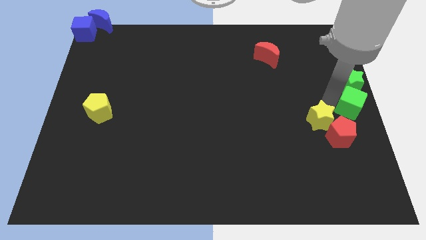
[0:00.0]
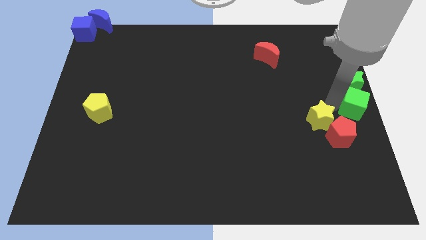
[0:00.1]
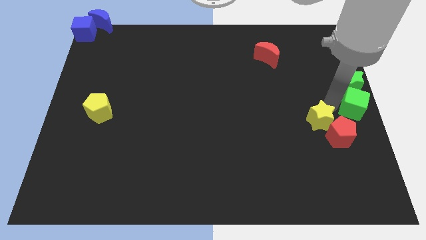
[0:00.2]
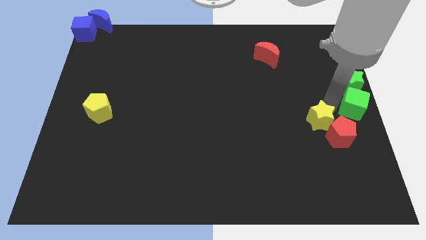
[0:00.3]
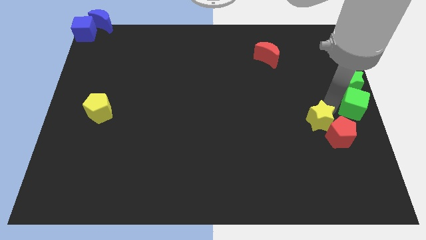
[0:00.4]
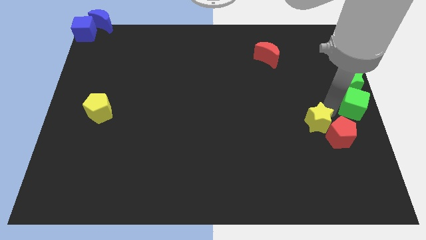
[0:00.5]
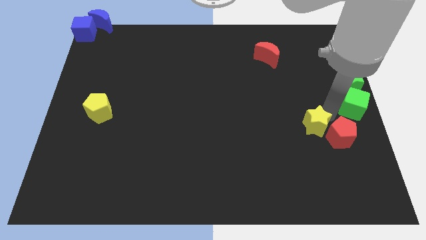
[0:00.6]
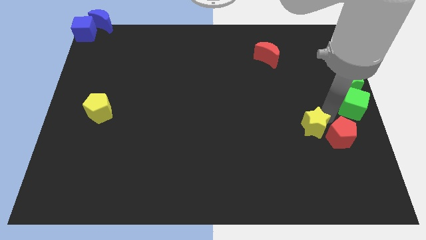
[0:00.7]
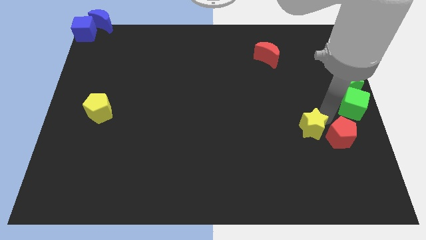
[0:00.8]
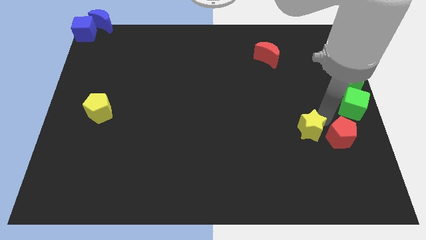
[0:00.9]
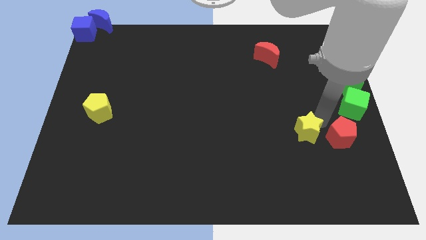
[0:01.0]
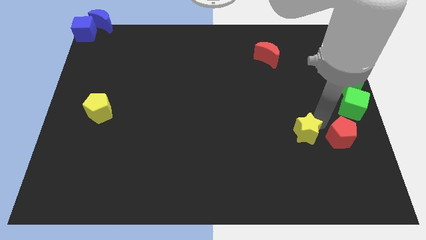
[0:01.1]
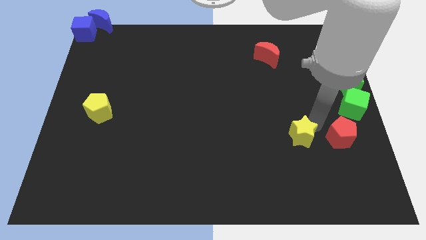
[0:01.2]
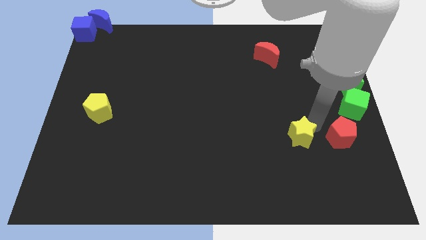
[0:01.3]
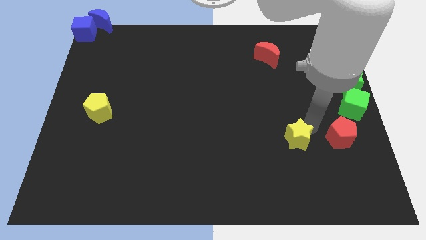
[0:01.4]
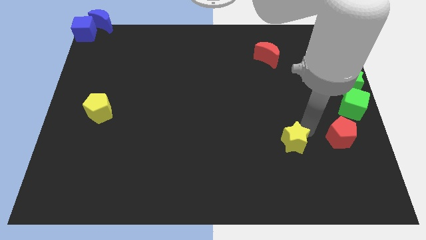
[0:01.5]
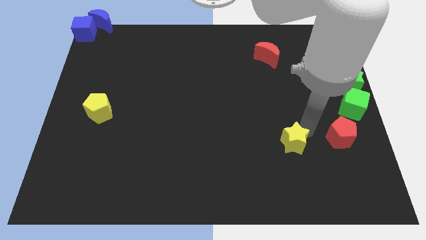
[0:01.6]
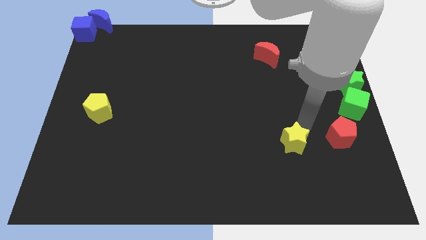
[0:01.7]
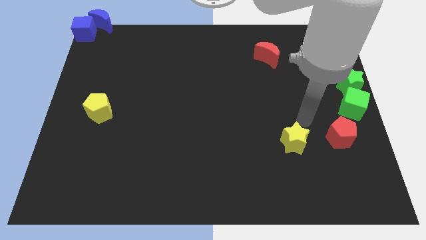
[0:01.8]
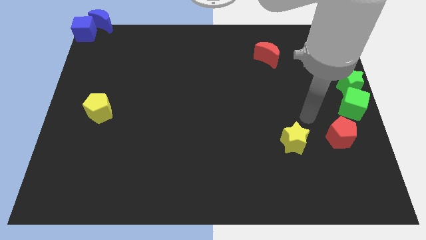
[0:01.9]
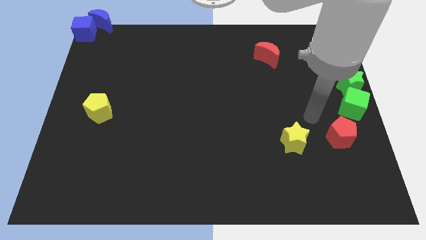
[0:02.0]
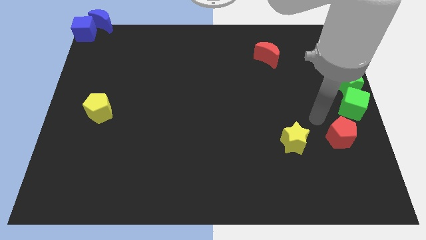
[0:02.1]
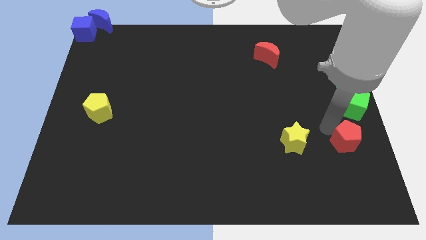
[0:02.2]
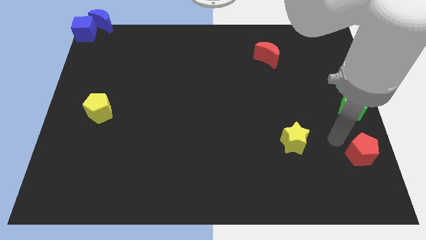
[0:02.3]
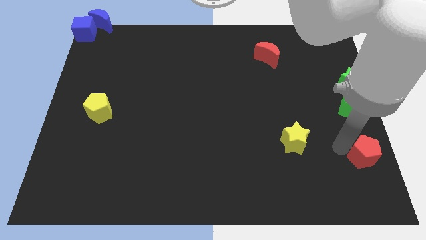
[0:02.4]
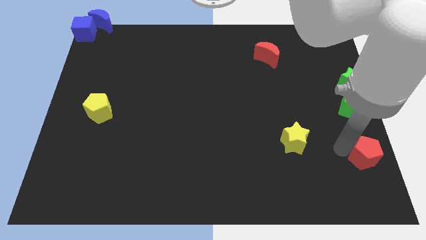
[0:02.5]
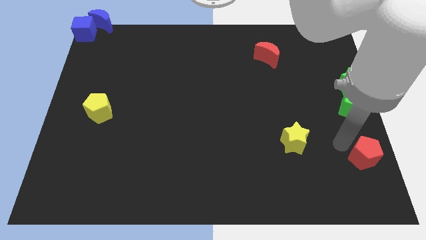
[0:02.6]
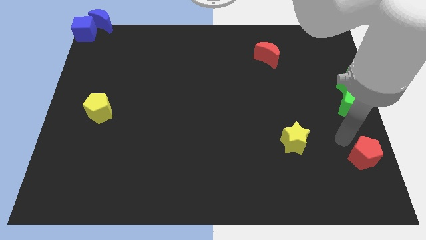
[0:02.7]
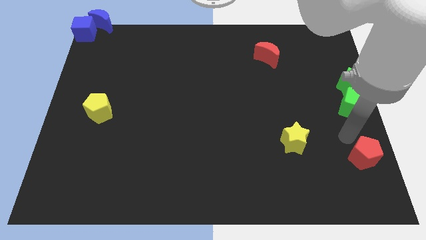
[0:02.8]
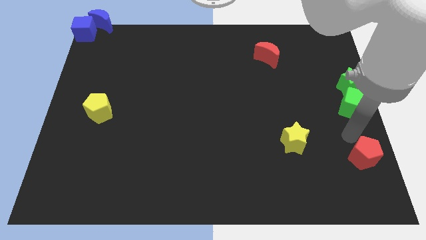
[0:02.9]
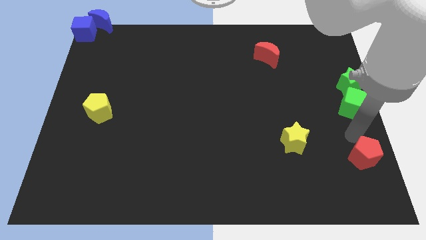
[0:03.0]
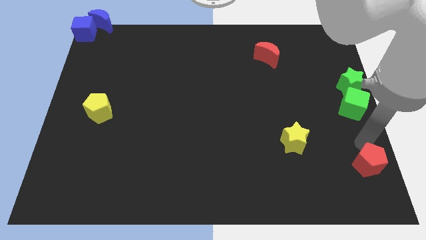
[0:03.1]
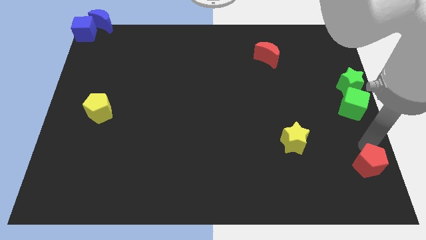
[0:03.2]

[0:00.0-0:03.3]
push the yellow star and red pentagon towards the bottom side of the board

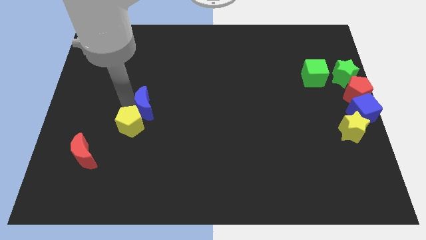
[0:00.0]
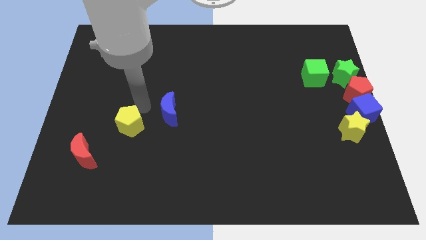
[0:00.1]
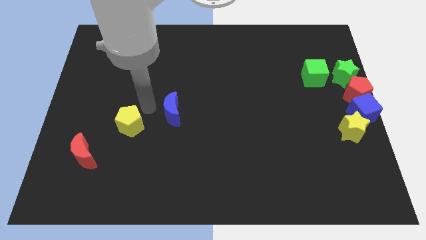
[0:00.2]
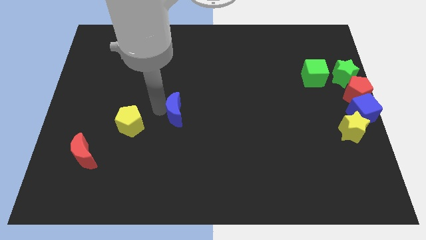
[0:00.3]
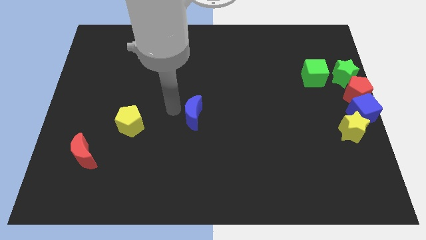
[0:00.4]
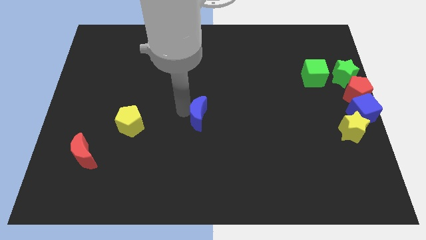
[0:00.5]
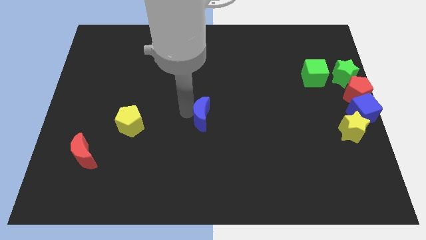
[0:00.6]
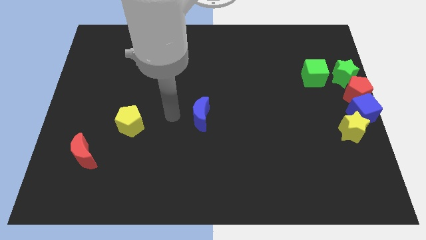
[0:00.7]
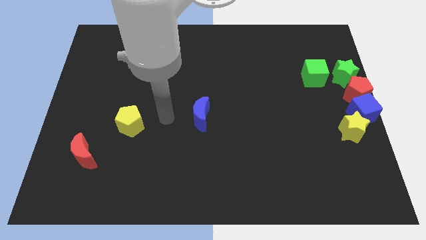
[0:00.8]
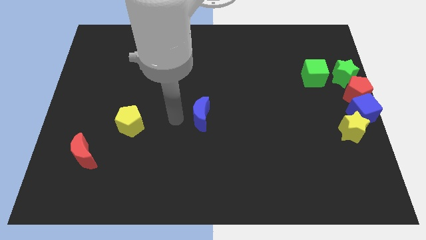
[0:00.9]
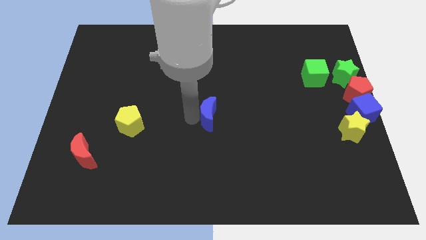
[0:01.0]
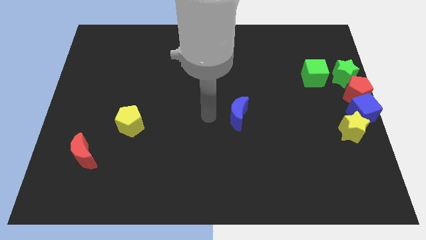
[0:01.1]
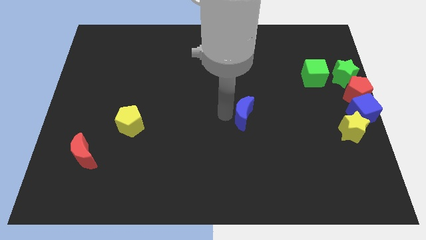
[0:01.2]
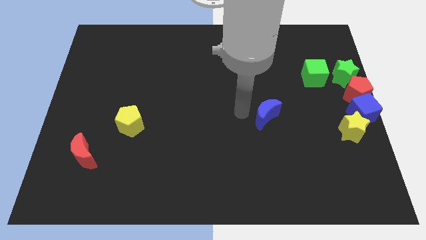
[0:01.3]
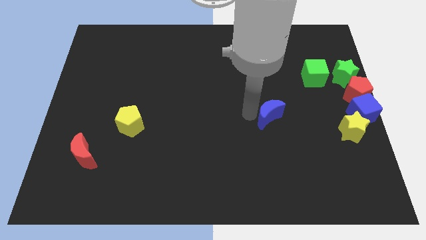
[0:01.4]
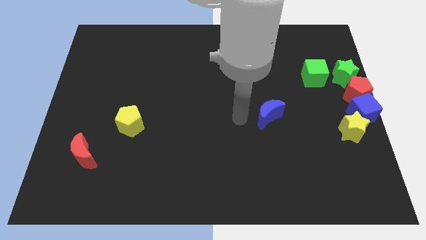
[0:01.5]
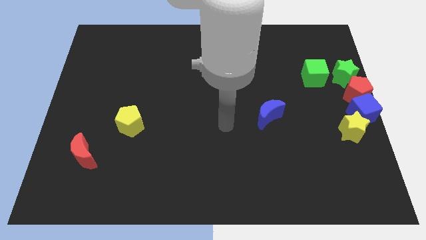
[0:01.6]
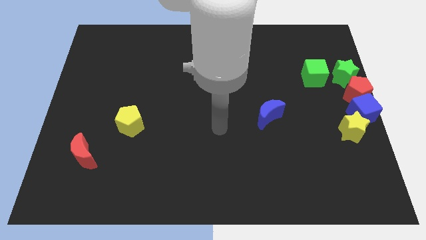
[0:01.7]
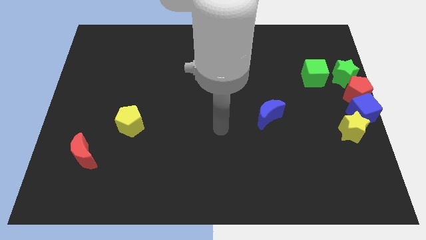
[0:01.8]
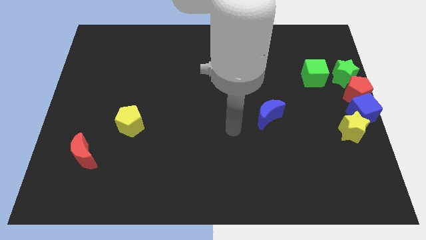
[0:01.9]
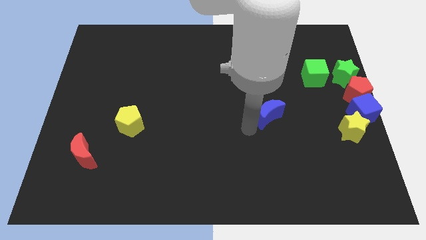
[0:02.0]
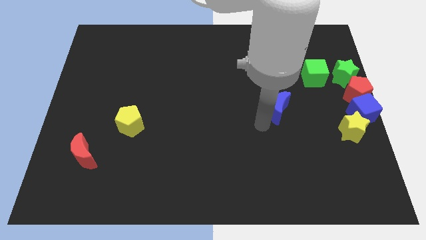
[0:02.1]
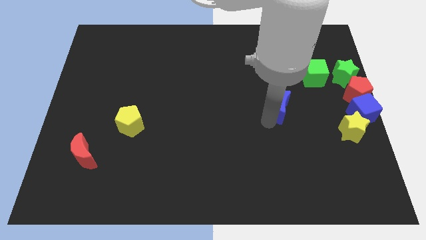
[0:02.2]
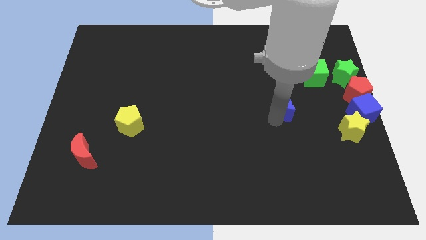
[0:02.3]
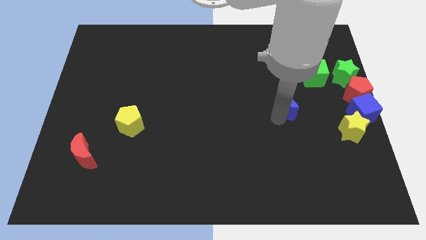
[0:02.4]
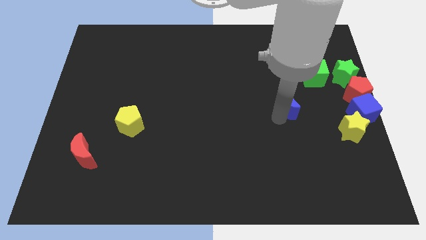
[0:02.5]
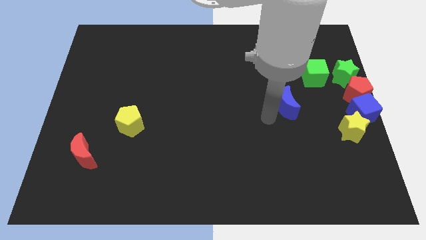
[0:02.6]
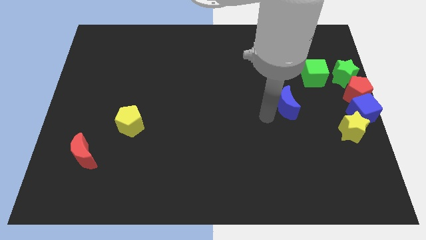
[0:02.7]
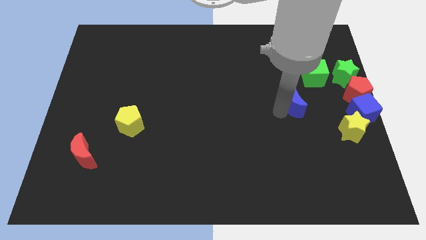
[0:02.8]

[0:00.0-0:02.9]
push the blue crescent to the bottom left of the green cube

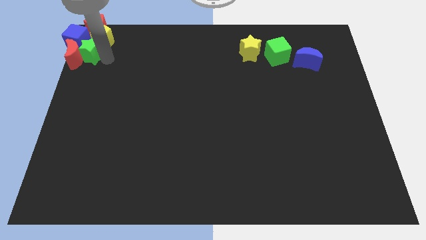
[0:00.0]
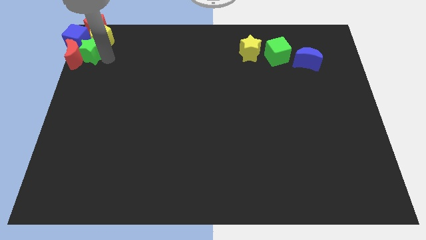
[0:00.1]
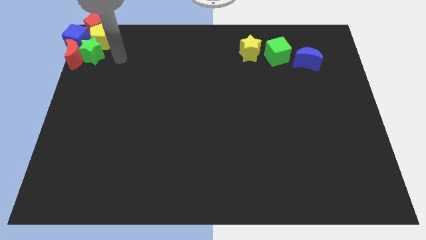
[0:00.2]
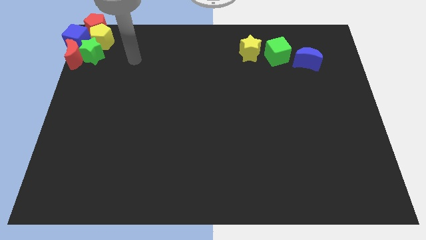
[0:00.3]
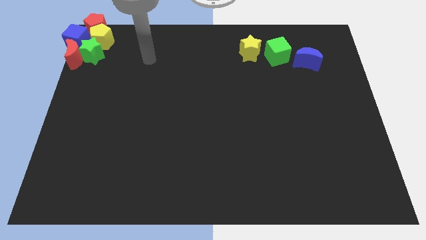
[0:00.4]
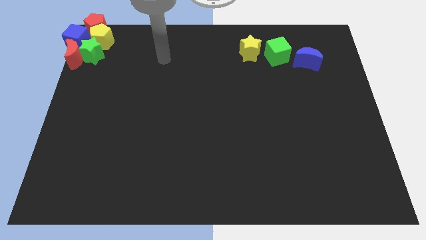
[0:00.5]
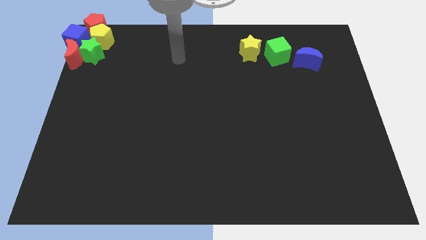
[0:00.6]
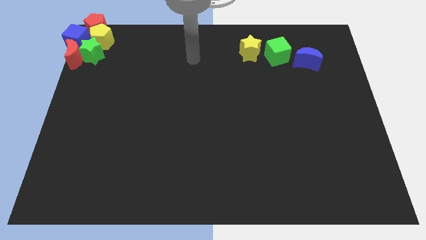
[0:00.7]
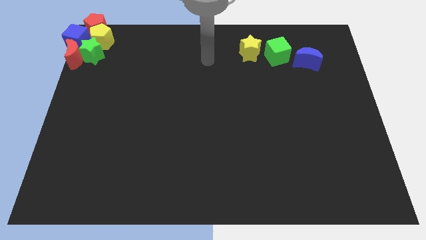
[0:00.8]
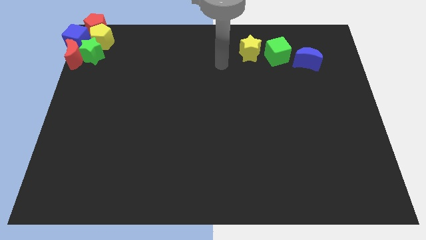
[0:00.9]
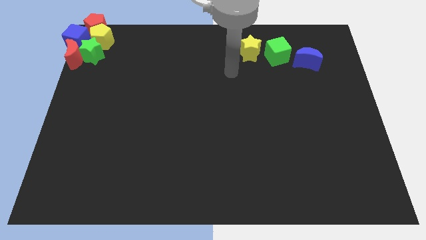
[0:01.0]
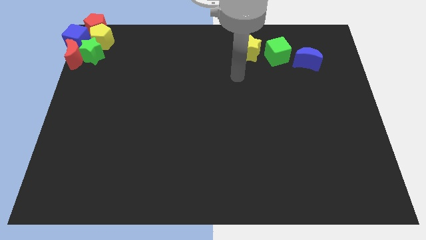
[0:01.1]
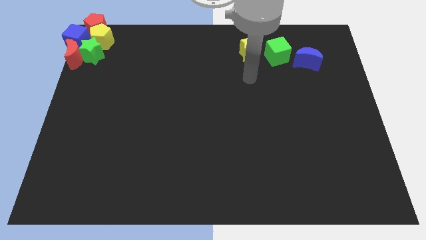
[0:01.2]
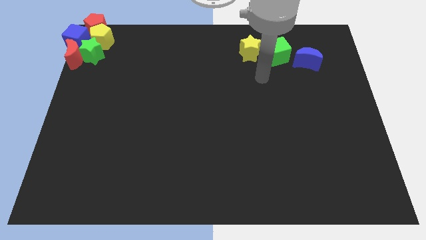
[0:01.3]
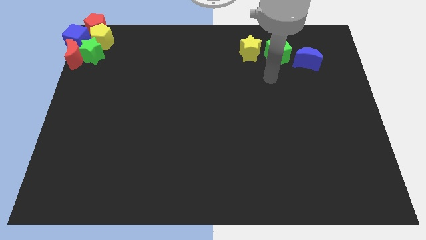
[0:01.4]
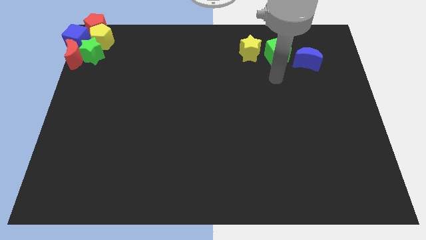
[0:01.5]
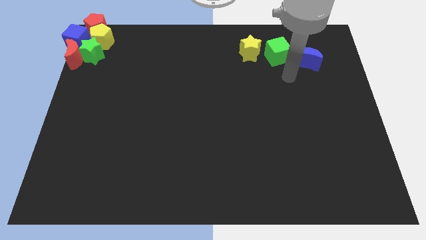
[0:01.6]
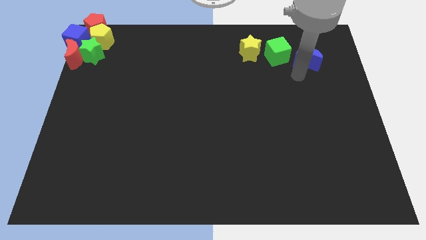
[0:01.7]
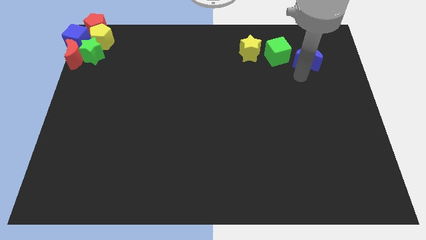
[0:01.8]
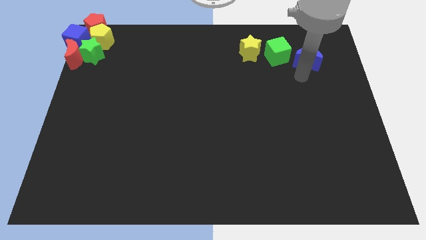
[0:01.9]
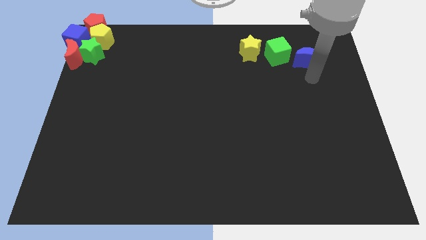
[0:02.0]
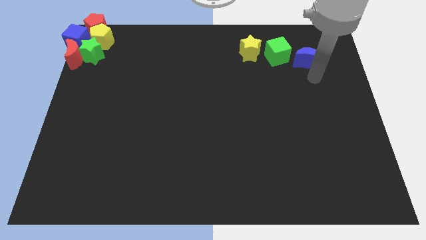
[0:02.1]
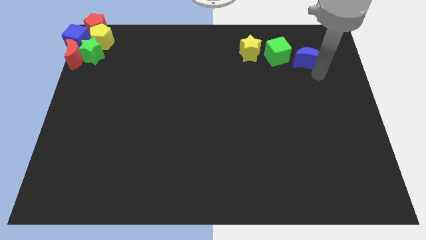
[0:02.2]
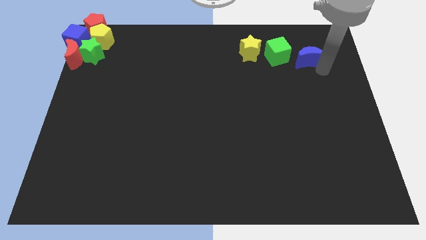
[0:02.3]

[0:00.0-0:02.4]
move the arm away from the green star

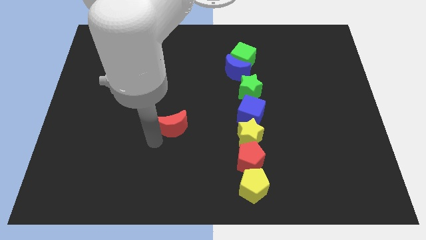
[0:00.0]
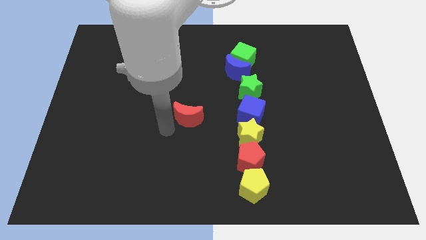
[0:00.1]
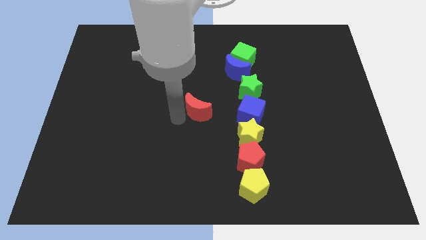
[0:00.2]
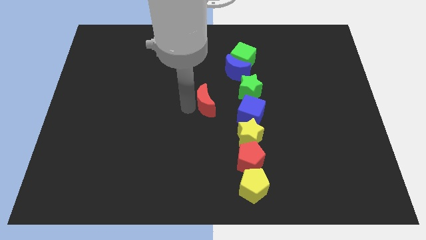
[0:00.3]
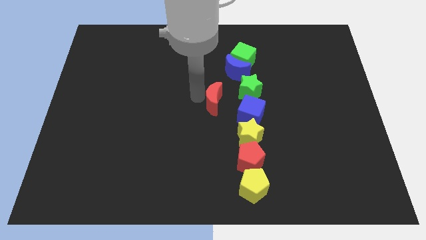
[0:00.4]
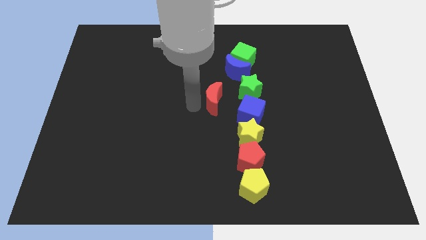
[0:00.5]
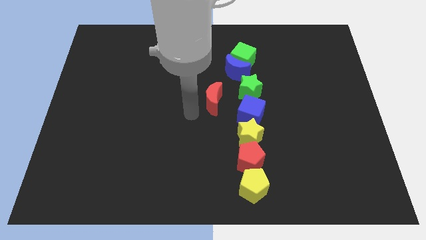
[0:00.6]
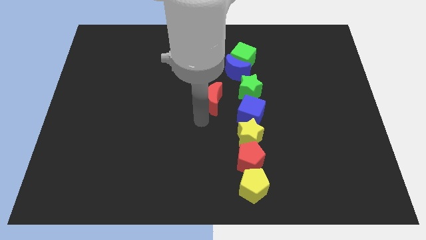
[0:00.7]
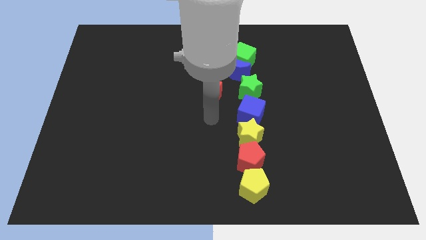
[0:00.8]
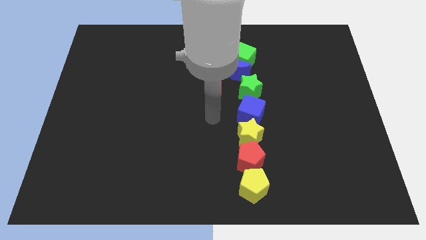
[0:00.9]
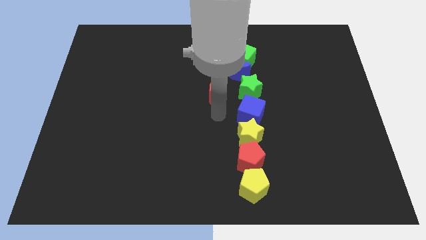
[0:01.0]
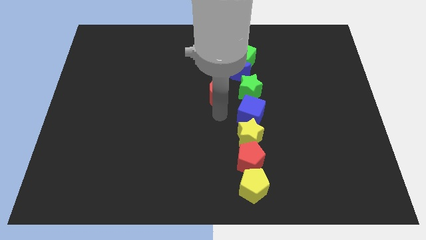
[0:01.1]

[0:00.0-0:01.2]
push the red crescent near to the green star
